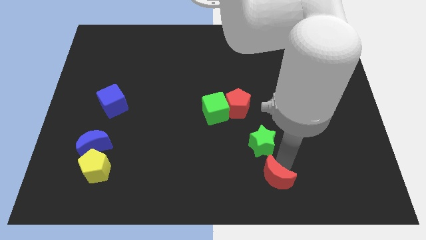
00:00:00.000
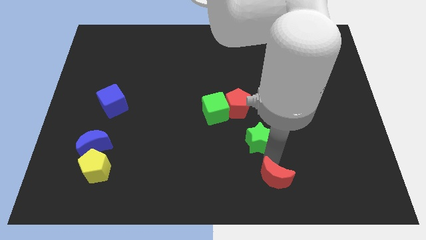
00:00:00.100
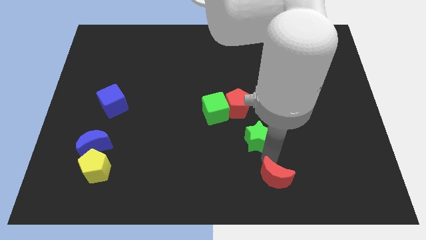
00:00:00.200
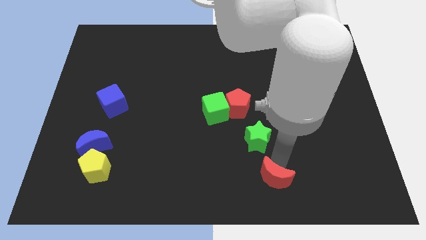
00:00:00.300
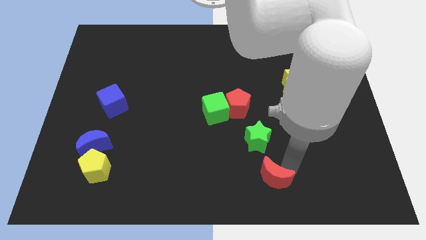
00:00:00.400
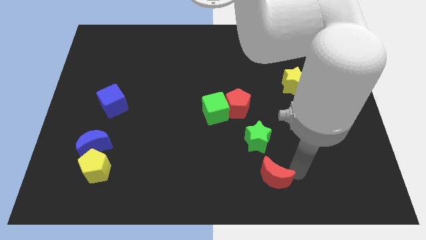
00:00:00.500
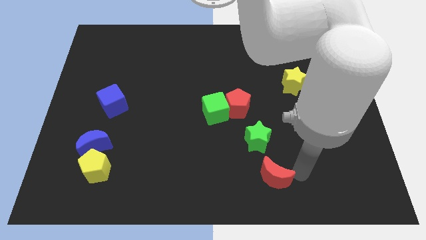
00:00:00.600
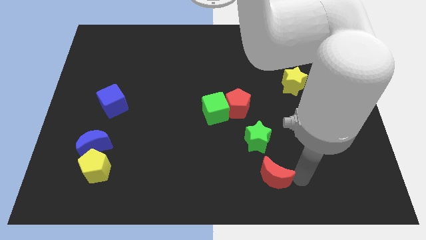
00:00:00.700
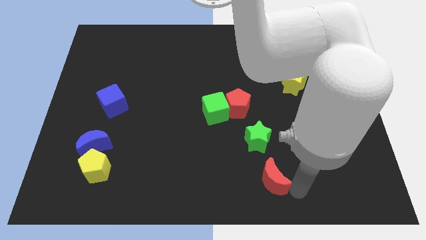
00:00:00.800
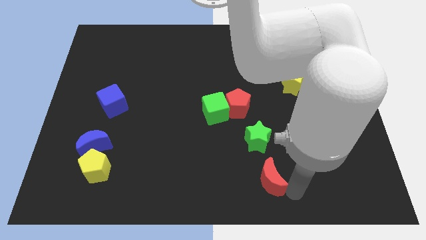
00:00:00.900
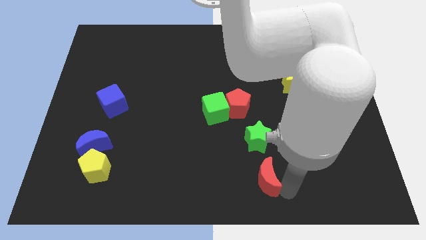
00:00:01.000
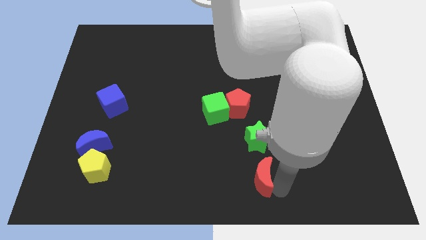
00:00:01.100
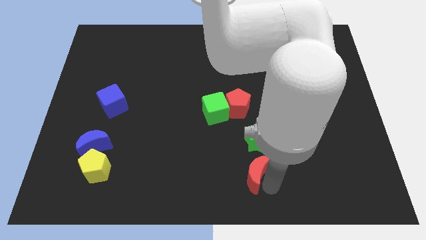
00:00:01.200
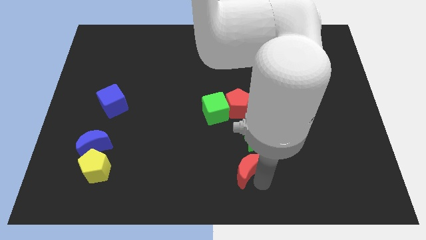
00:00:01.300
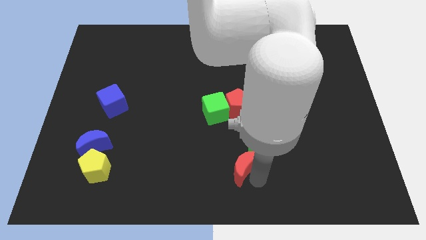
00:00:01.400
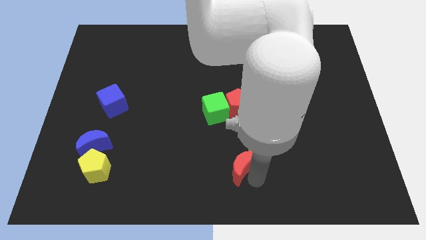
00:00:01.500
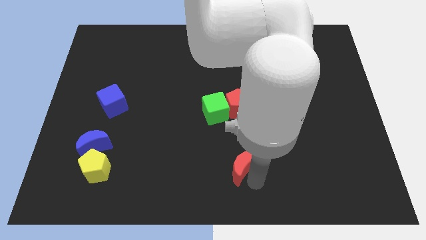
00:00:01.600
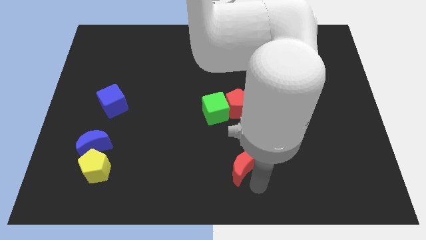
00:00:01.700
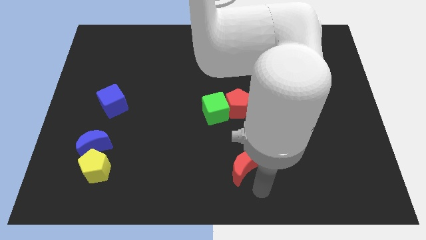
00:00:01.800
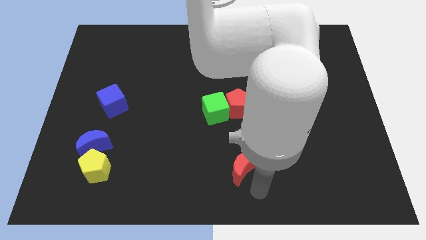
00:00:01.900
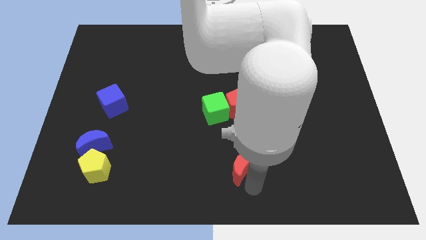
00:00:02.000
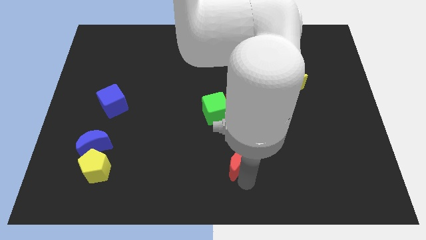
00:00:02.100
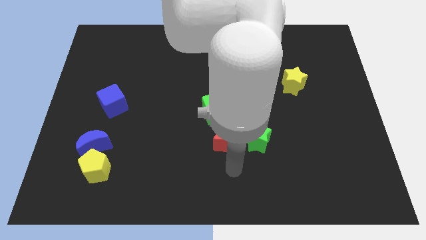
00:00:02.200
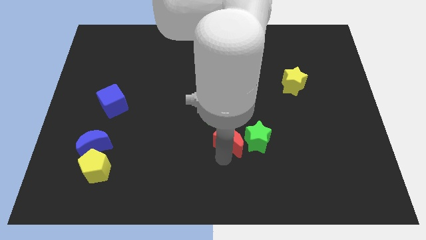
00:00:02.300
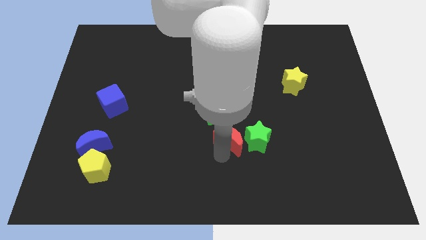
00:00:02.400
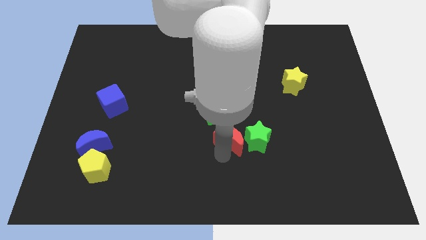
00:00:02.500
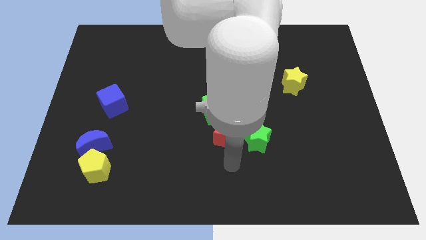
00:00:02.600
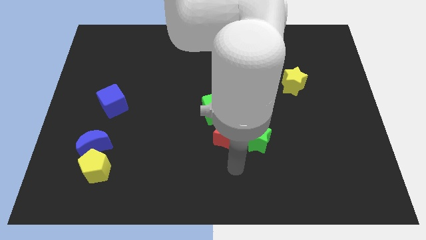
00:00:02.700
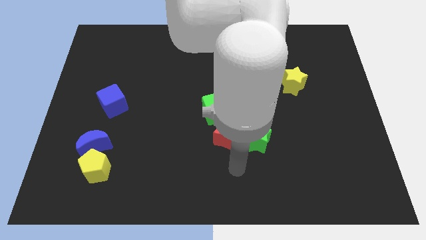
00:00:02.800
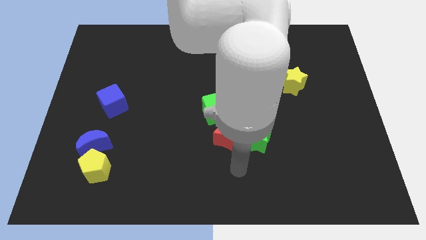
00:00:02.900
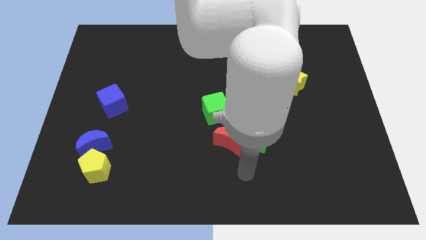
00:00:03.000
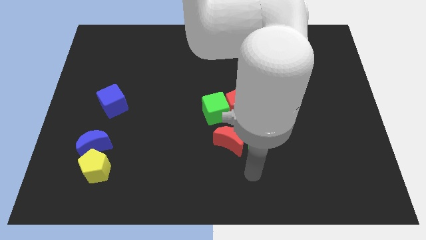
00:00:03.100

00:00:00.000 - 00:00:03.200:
place red crescent above green cube

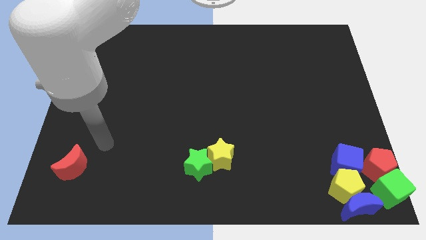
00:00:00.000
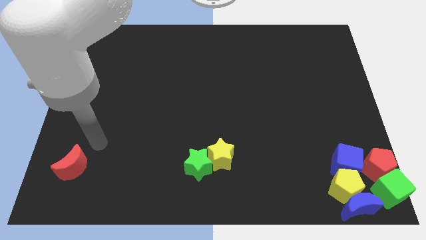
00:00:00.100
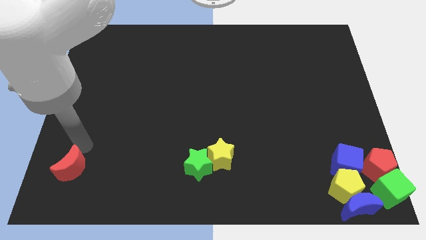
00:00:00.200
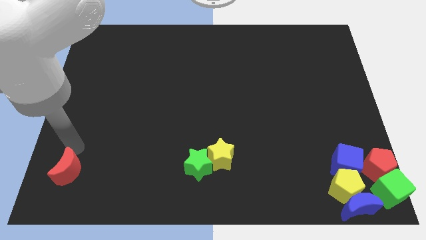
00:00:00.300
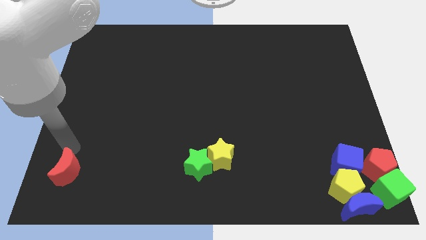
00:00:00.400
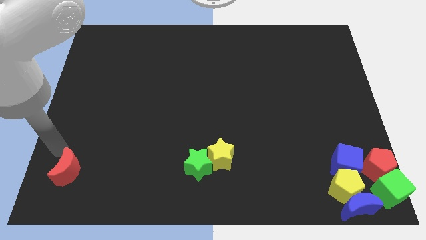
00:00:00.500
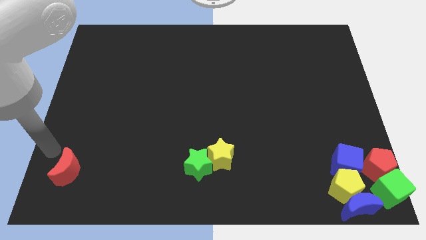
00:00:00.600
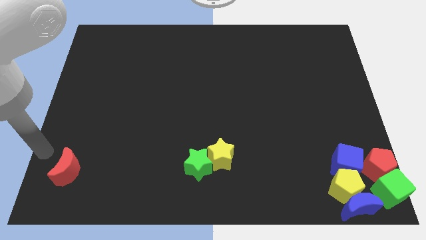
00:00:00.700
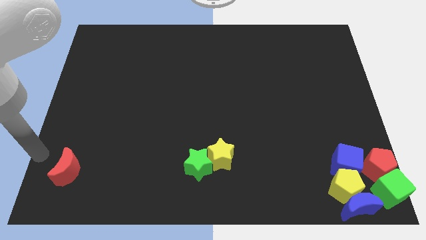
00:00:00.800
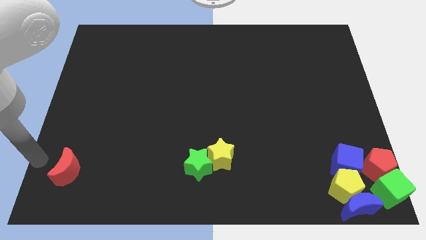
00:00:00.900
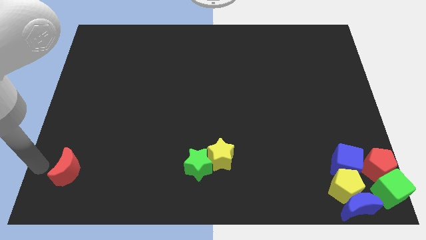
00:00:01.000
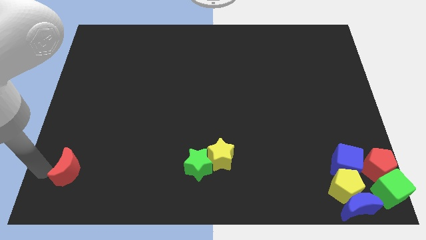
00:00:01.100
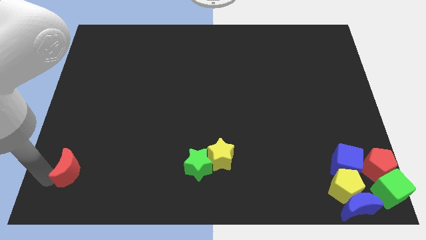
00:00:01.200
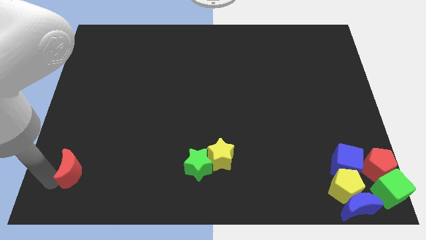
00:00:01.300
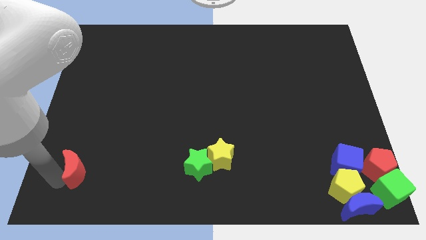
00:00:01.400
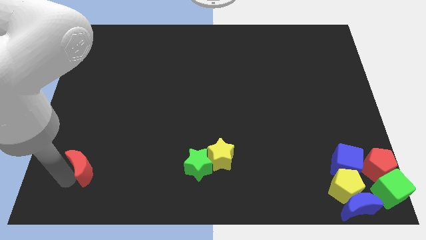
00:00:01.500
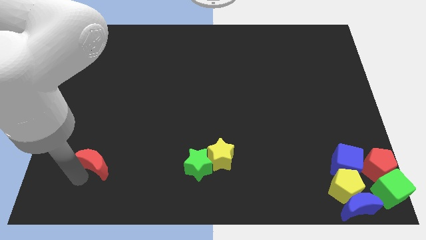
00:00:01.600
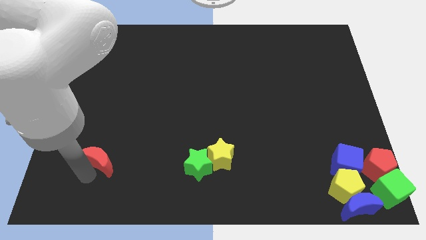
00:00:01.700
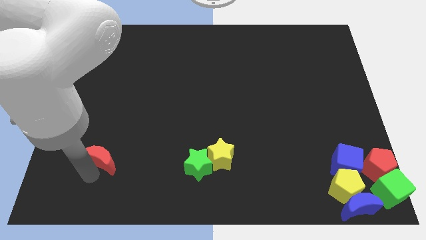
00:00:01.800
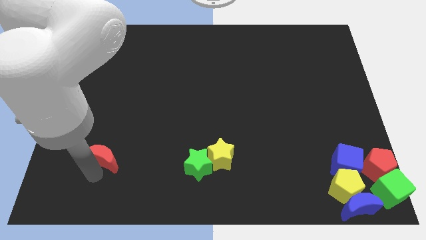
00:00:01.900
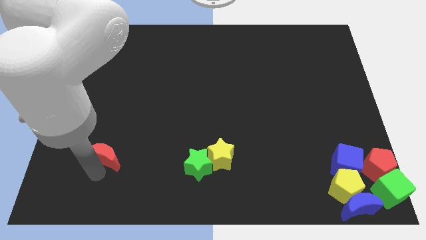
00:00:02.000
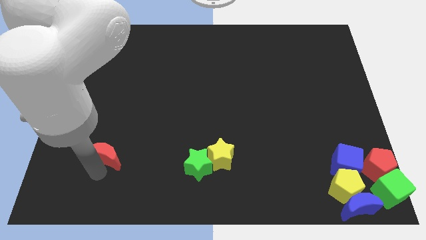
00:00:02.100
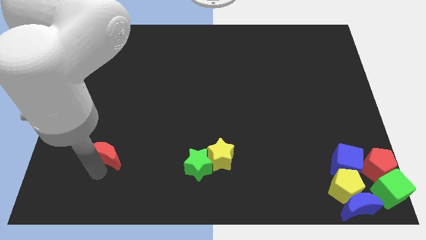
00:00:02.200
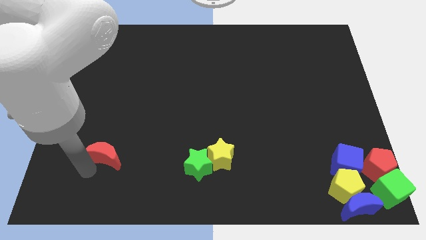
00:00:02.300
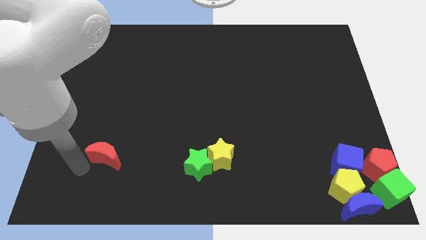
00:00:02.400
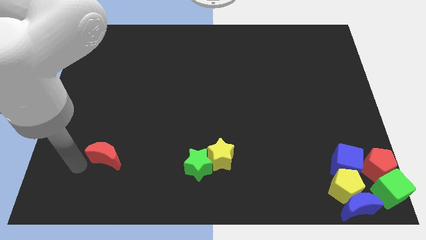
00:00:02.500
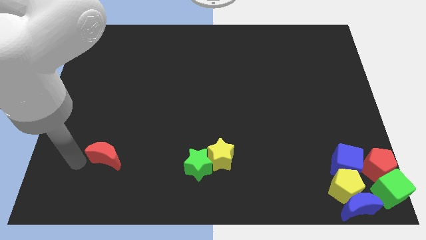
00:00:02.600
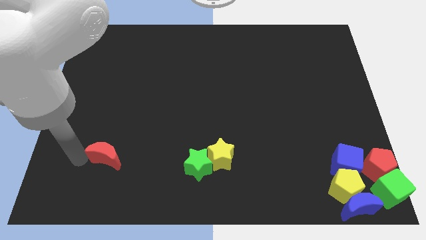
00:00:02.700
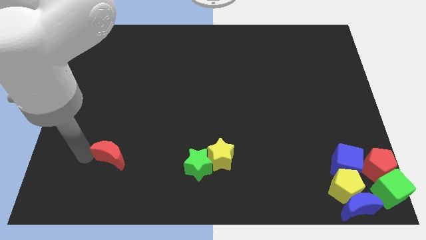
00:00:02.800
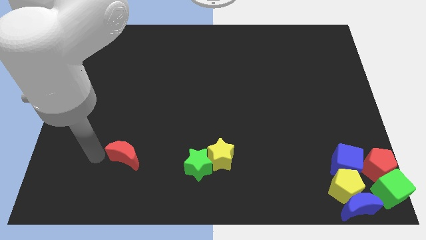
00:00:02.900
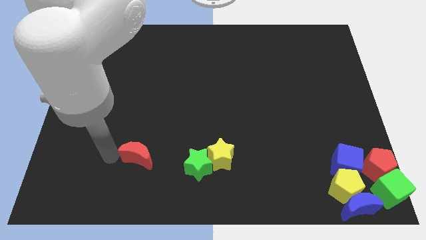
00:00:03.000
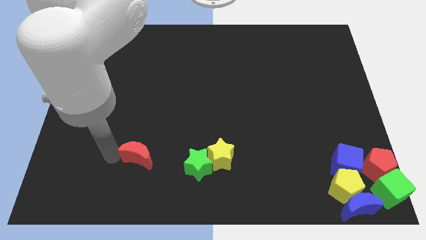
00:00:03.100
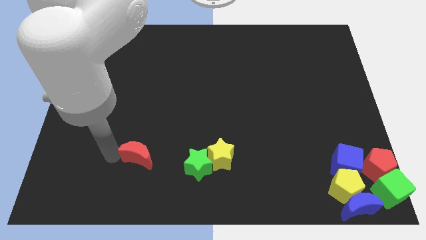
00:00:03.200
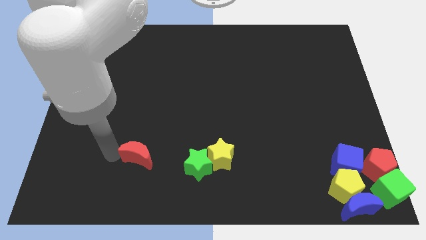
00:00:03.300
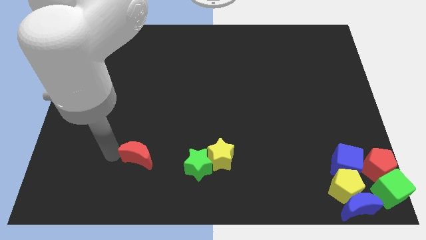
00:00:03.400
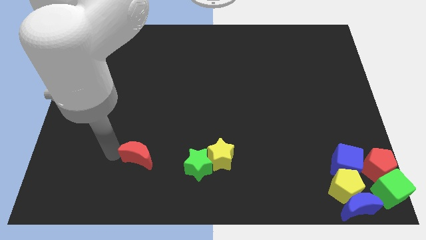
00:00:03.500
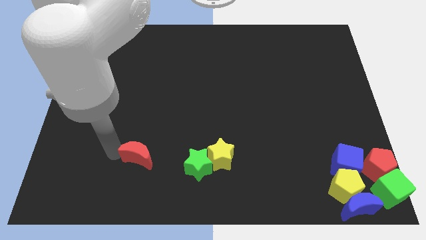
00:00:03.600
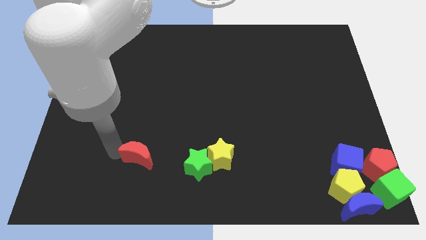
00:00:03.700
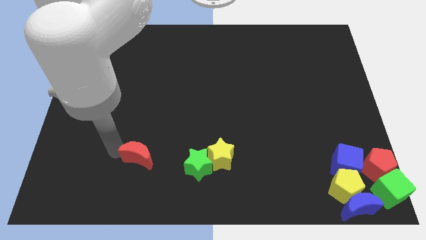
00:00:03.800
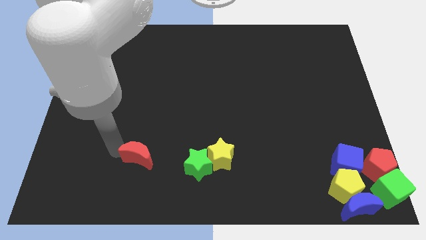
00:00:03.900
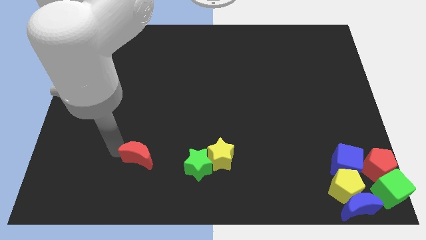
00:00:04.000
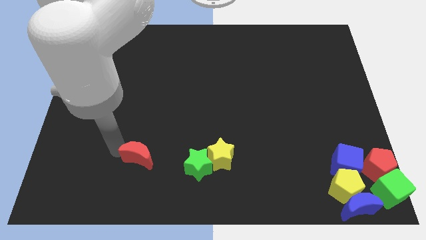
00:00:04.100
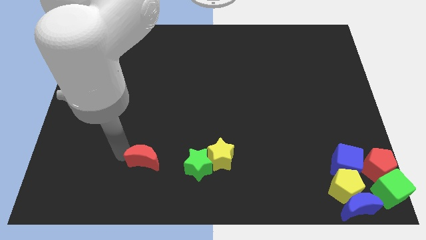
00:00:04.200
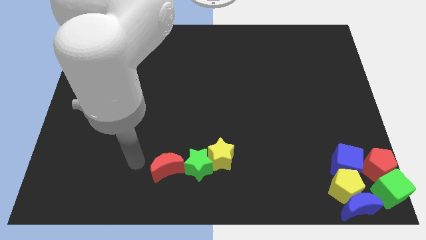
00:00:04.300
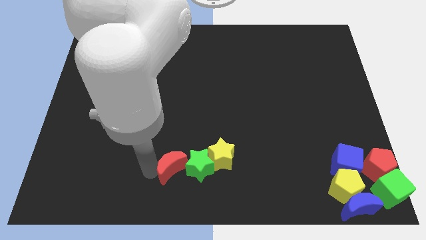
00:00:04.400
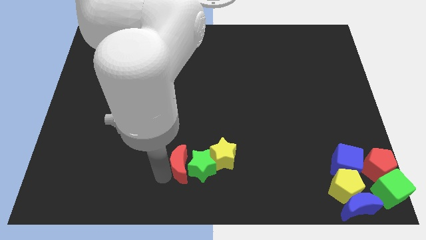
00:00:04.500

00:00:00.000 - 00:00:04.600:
push the red crescent into the green star

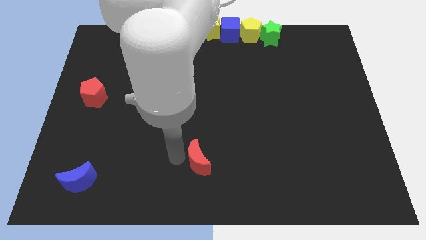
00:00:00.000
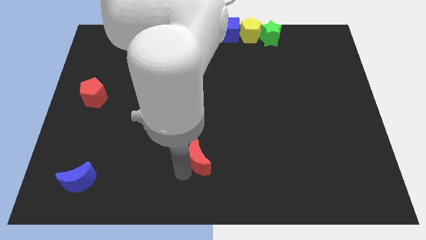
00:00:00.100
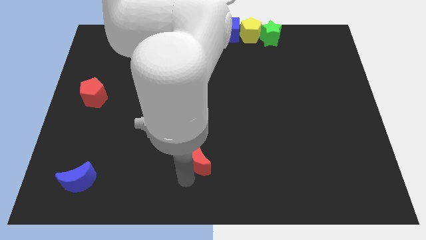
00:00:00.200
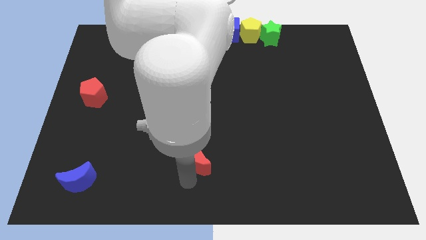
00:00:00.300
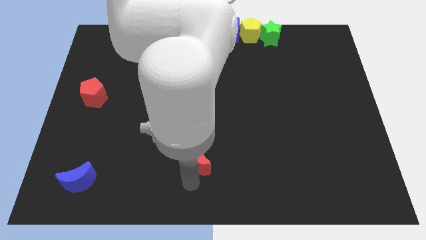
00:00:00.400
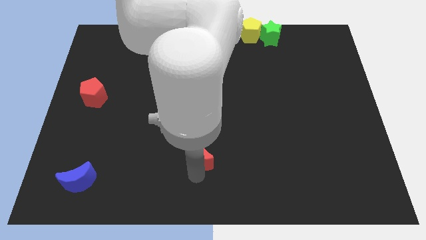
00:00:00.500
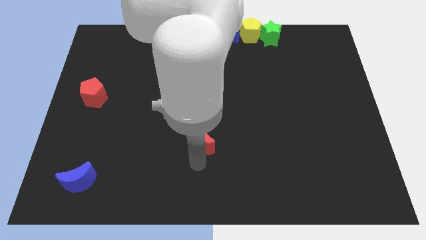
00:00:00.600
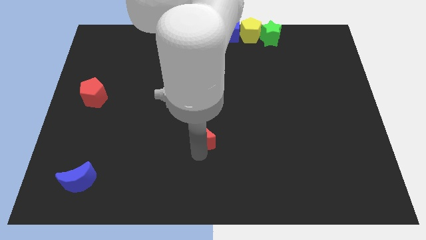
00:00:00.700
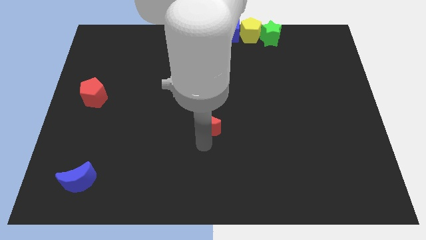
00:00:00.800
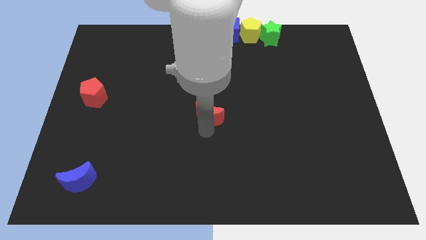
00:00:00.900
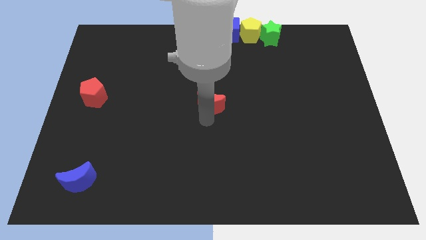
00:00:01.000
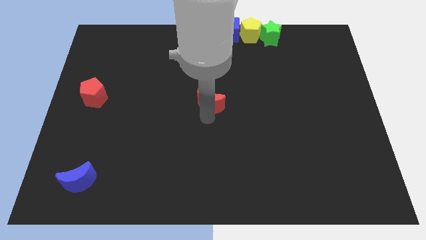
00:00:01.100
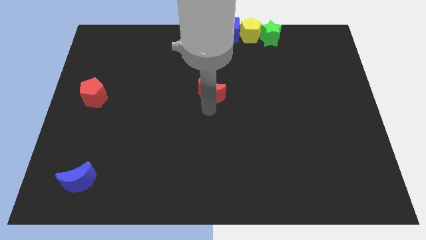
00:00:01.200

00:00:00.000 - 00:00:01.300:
place the red moon at the center of the board
